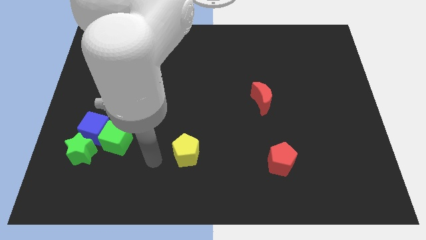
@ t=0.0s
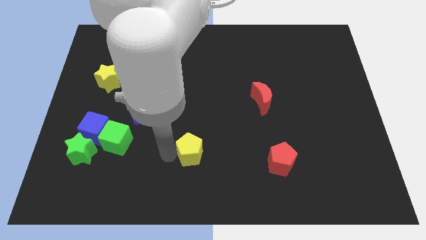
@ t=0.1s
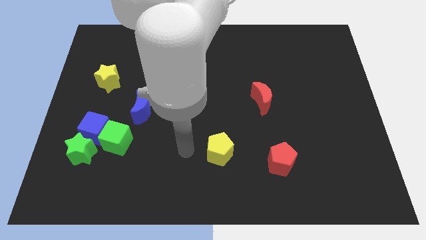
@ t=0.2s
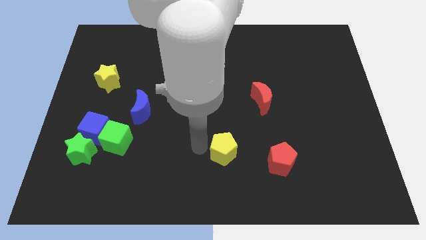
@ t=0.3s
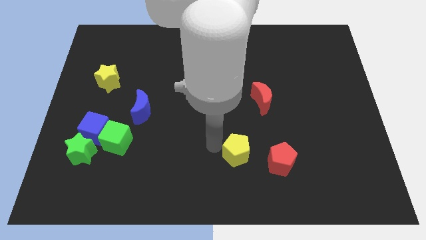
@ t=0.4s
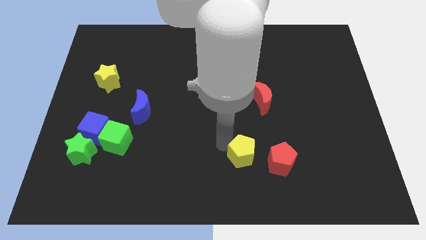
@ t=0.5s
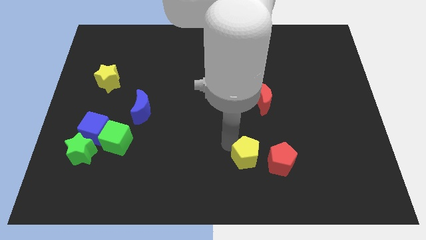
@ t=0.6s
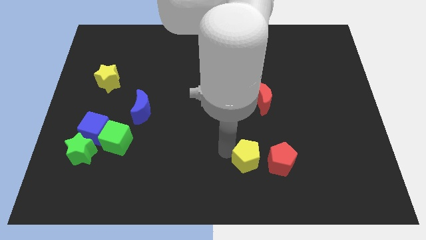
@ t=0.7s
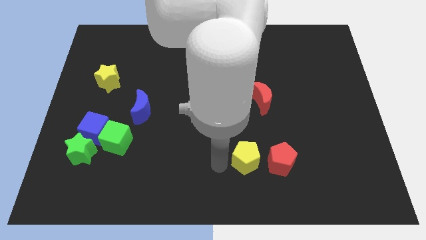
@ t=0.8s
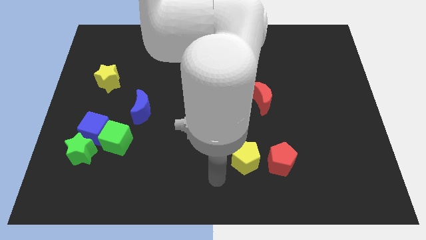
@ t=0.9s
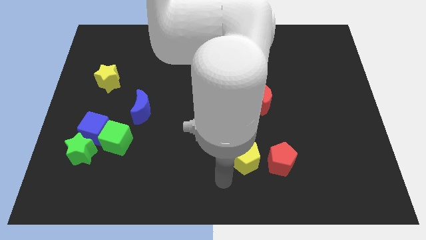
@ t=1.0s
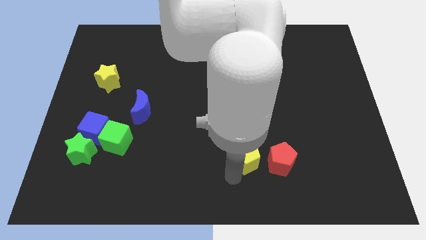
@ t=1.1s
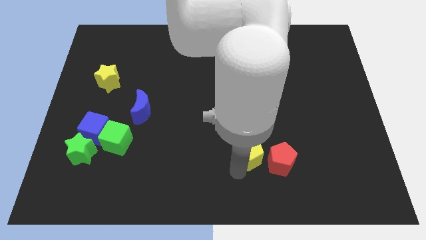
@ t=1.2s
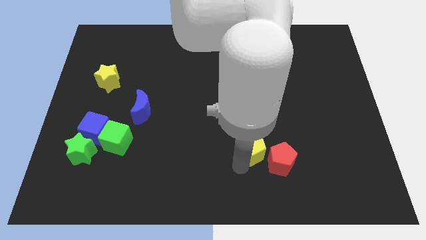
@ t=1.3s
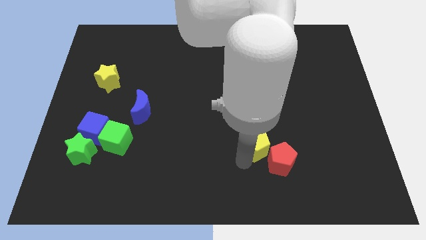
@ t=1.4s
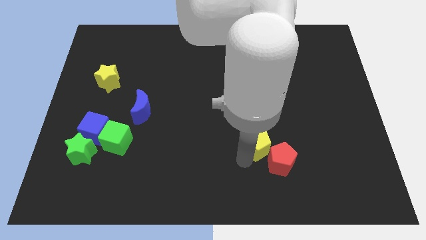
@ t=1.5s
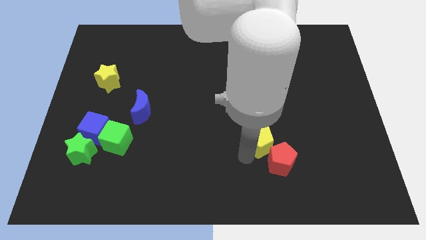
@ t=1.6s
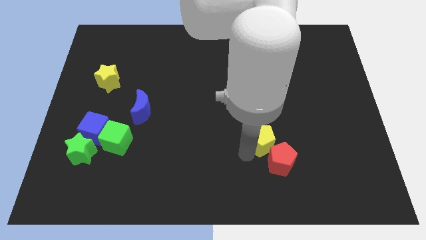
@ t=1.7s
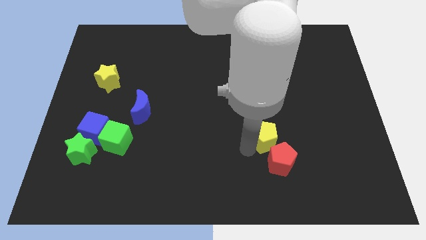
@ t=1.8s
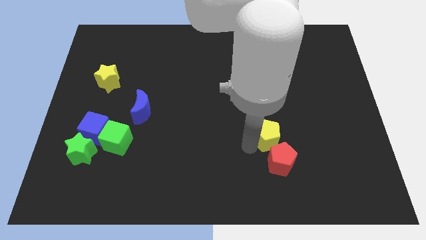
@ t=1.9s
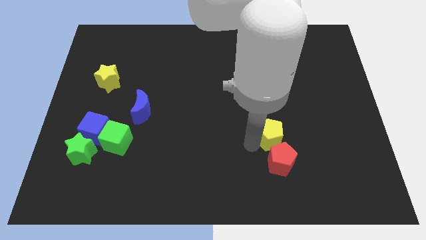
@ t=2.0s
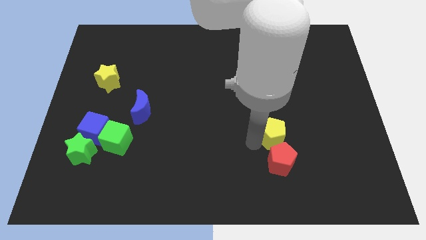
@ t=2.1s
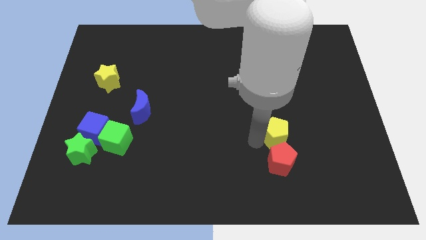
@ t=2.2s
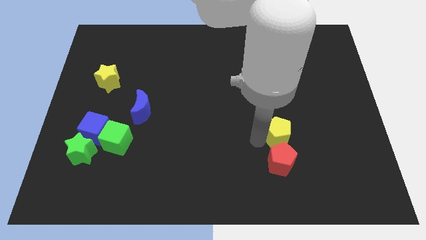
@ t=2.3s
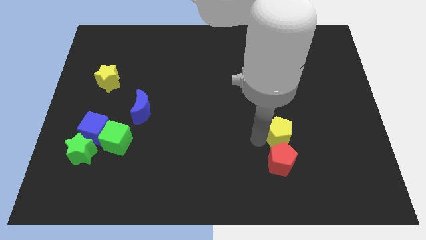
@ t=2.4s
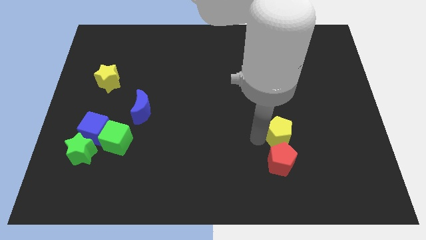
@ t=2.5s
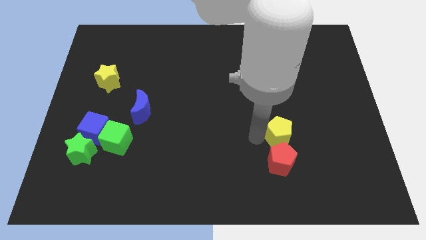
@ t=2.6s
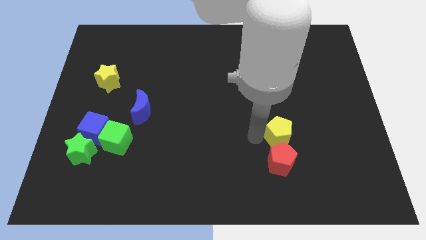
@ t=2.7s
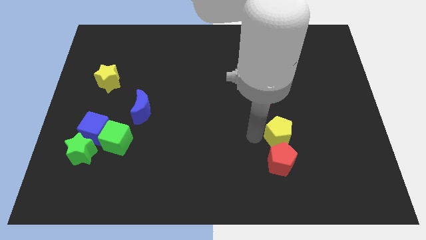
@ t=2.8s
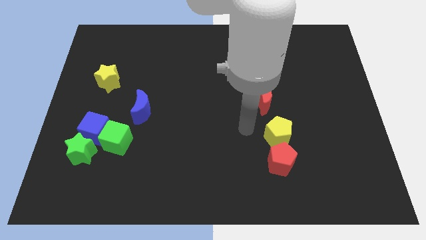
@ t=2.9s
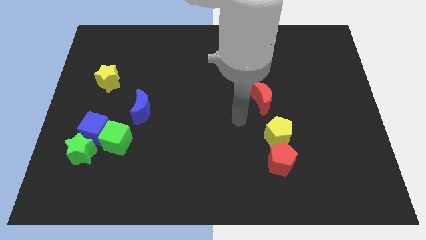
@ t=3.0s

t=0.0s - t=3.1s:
place the yellow pentagon to the top side of the red pentagon

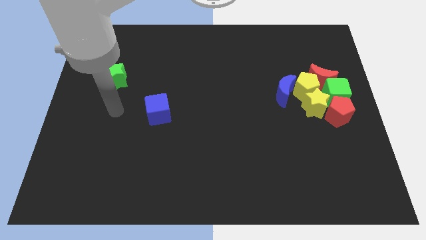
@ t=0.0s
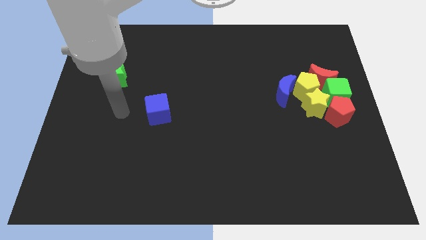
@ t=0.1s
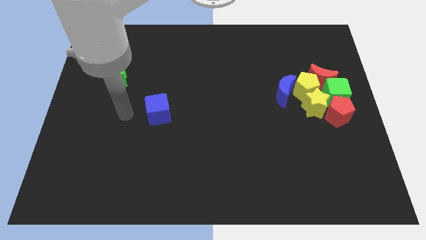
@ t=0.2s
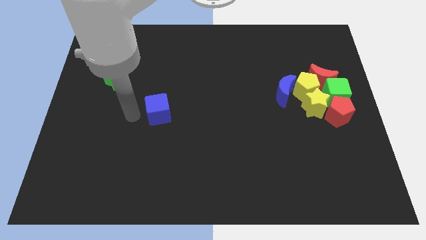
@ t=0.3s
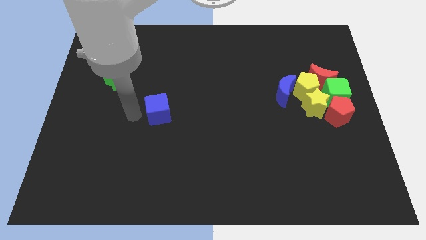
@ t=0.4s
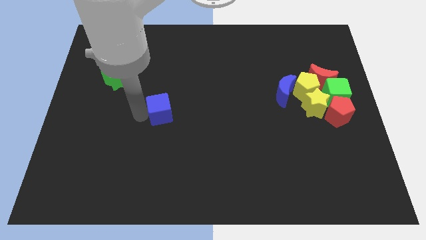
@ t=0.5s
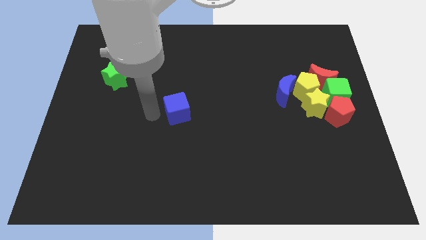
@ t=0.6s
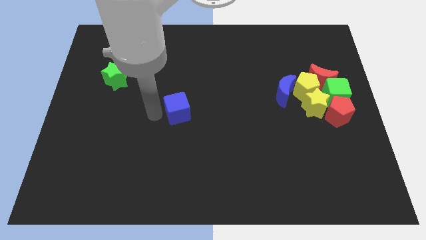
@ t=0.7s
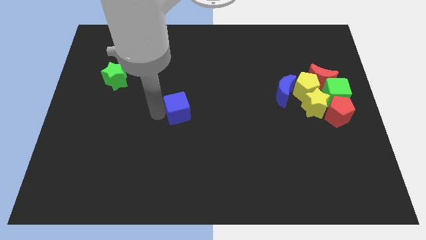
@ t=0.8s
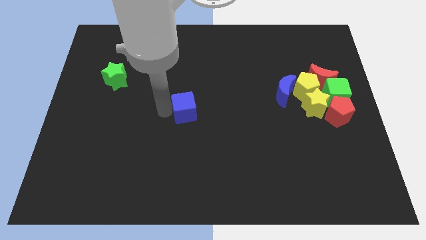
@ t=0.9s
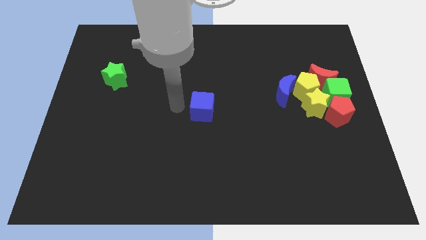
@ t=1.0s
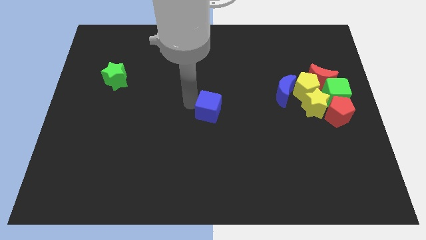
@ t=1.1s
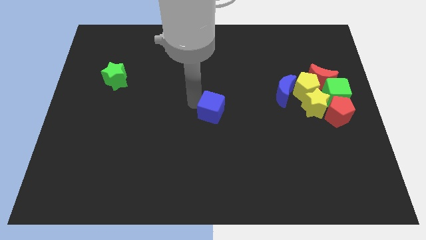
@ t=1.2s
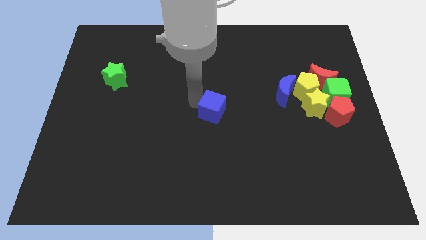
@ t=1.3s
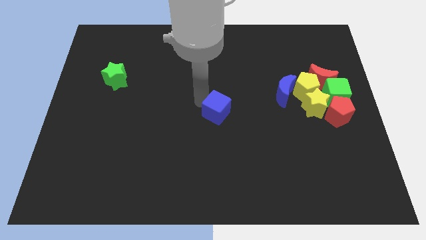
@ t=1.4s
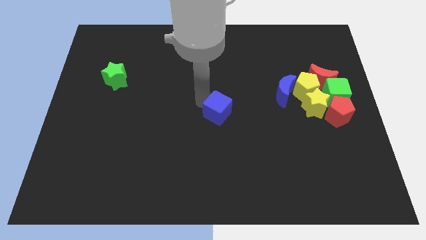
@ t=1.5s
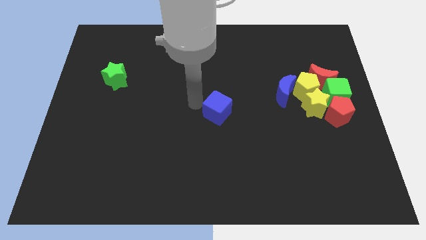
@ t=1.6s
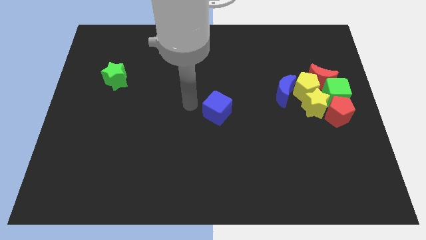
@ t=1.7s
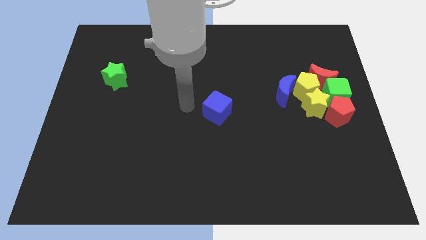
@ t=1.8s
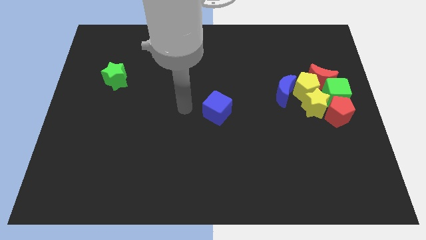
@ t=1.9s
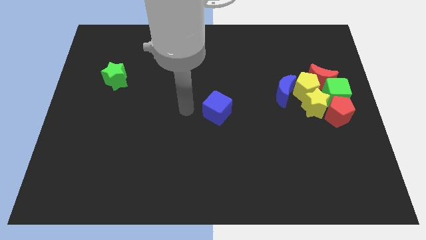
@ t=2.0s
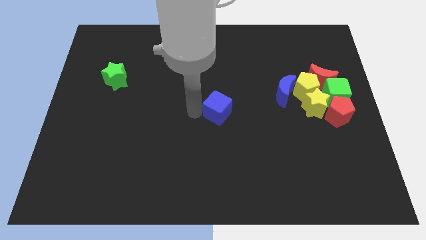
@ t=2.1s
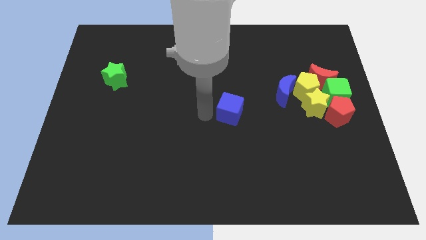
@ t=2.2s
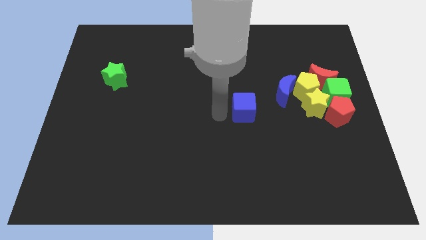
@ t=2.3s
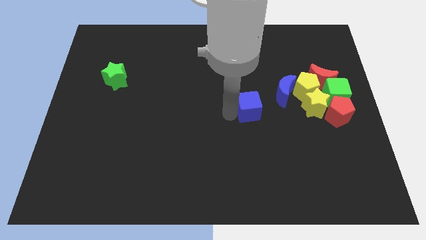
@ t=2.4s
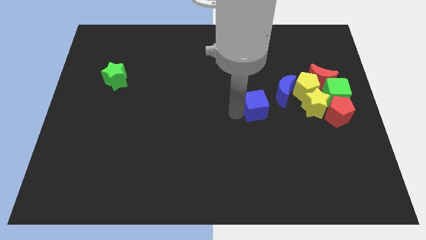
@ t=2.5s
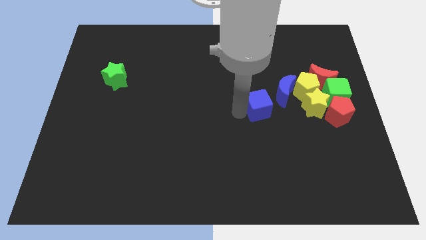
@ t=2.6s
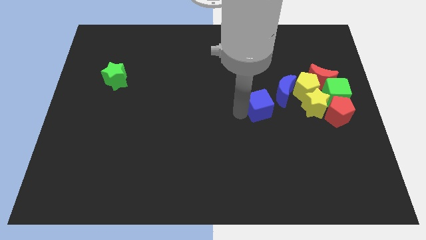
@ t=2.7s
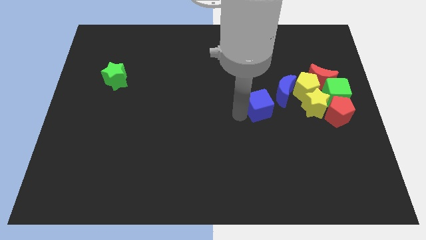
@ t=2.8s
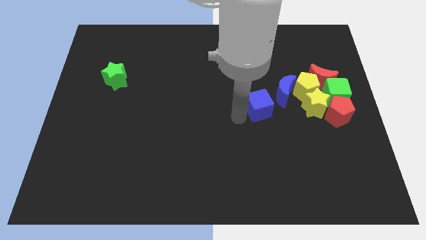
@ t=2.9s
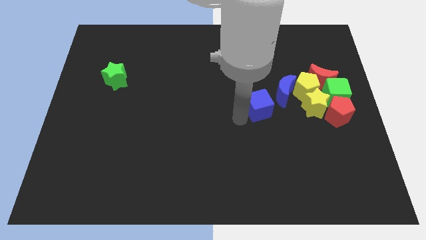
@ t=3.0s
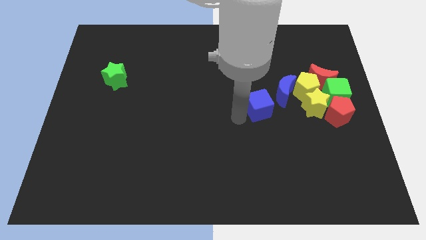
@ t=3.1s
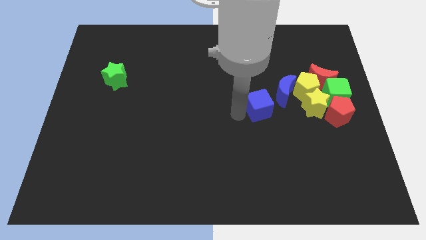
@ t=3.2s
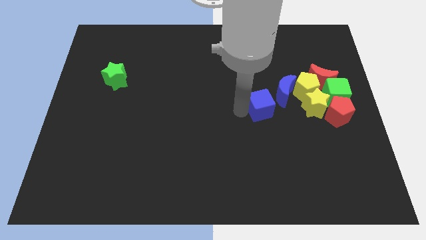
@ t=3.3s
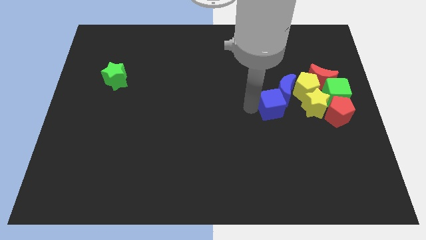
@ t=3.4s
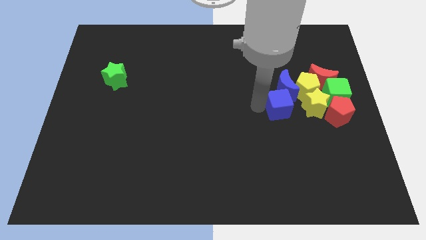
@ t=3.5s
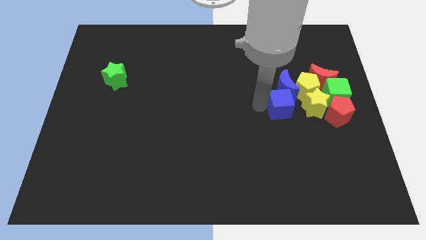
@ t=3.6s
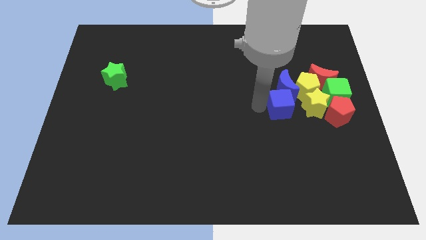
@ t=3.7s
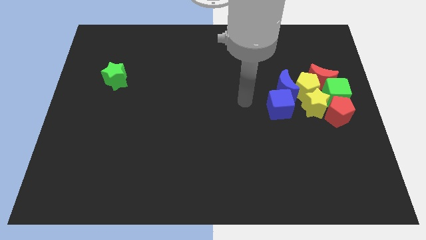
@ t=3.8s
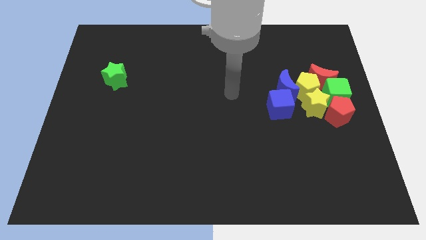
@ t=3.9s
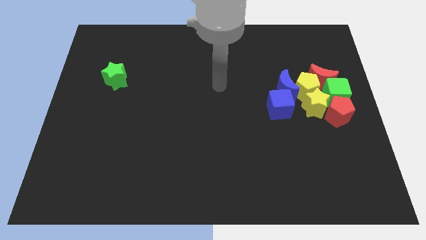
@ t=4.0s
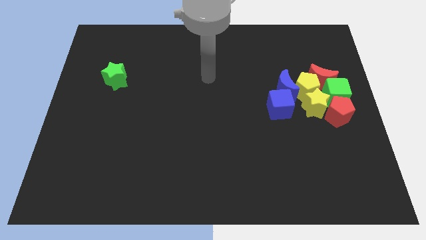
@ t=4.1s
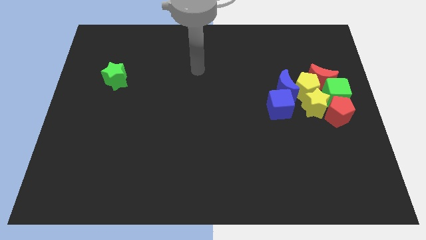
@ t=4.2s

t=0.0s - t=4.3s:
place the blue cube below into blue moon

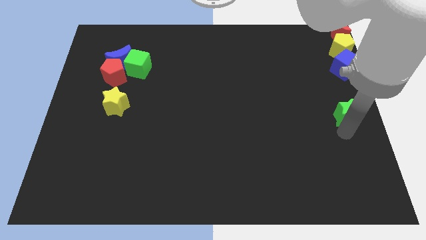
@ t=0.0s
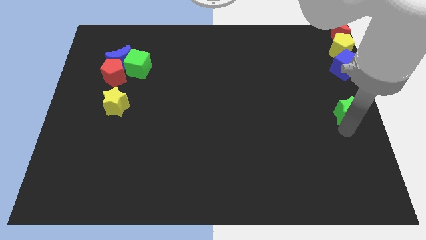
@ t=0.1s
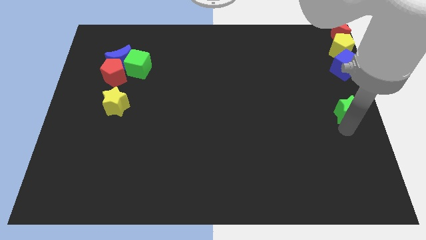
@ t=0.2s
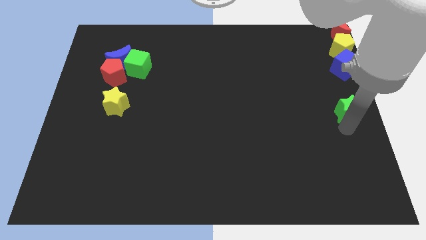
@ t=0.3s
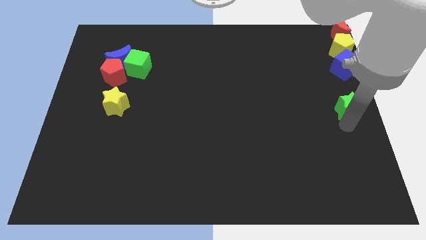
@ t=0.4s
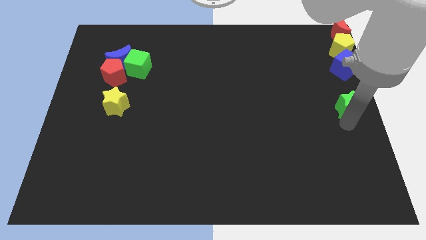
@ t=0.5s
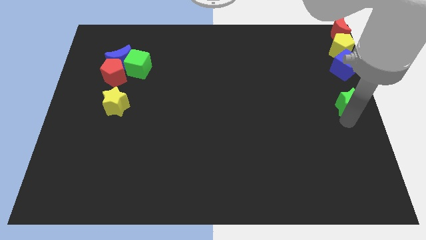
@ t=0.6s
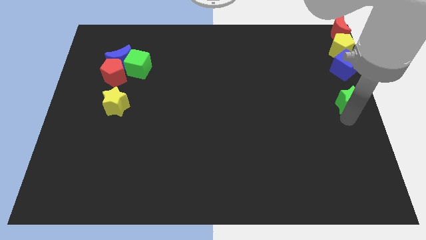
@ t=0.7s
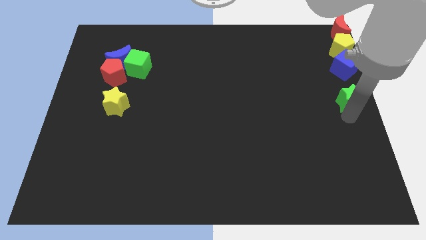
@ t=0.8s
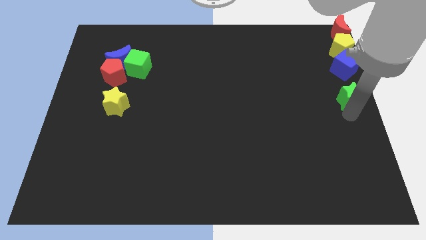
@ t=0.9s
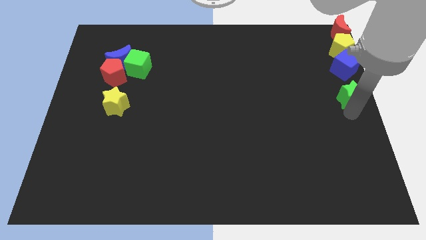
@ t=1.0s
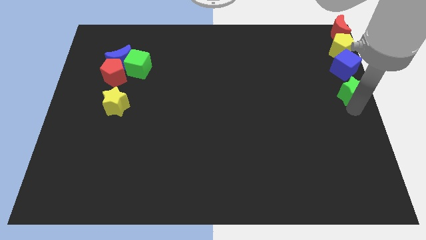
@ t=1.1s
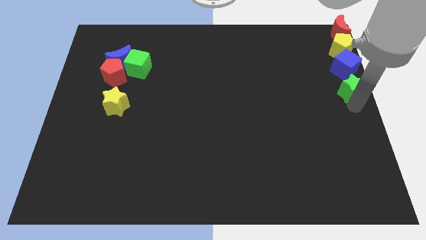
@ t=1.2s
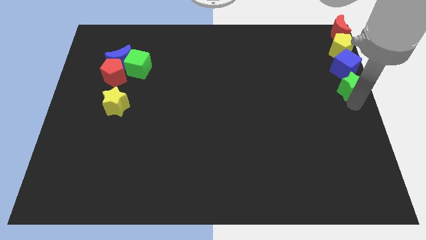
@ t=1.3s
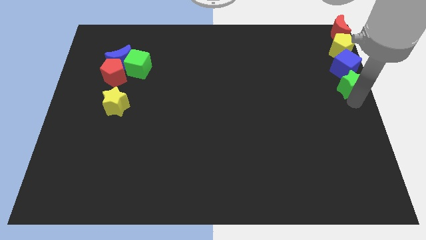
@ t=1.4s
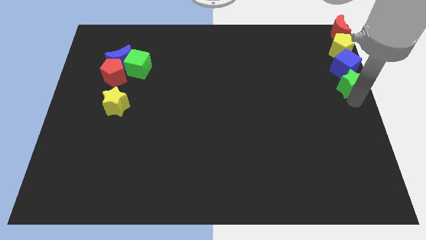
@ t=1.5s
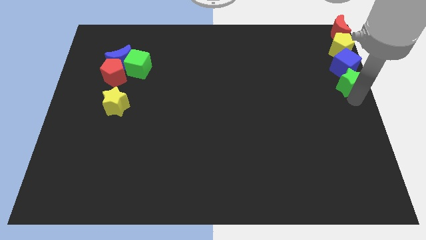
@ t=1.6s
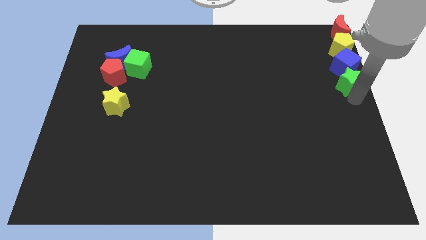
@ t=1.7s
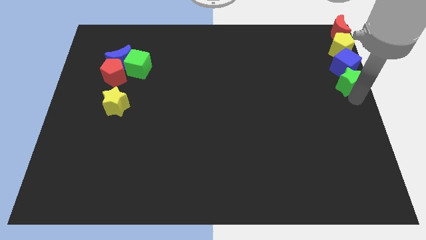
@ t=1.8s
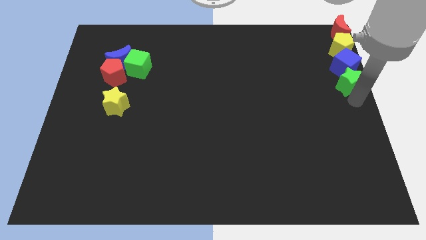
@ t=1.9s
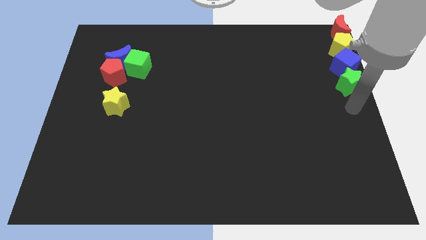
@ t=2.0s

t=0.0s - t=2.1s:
push the green star into blue cube
